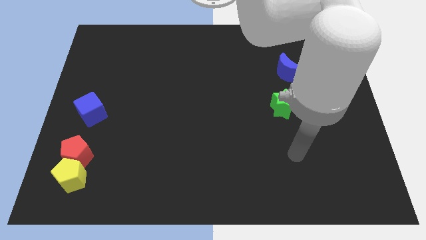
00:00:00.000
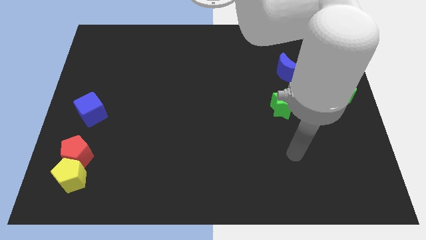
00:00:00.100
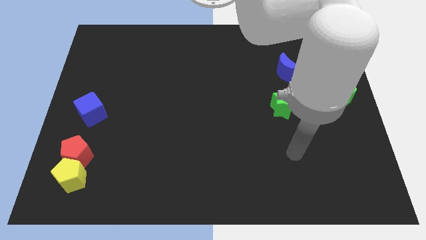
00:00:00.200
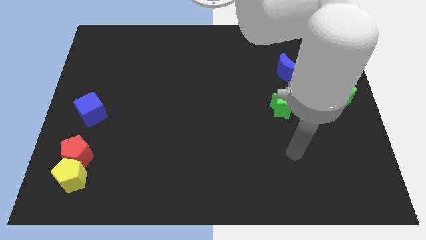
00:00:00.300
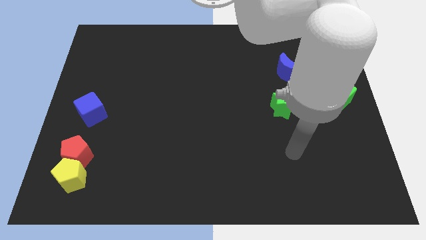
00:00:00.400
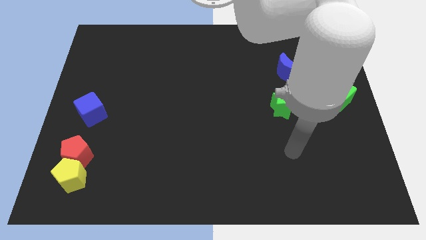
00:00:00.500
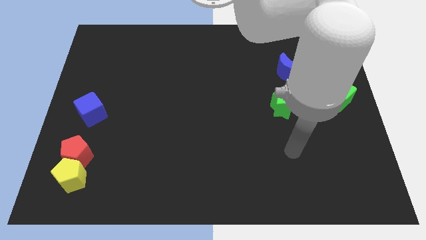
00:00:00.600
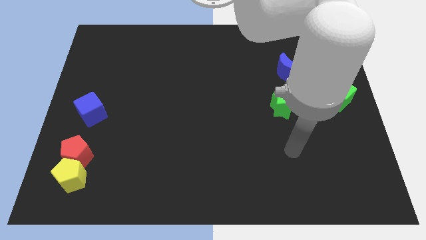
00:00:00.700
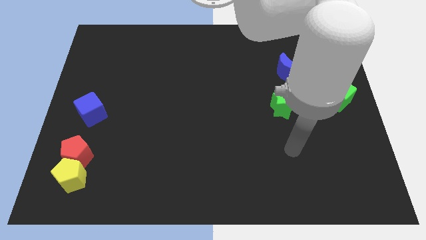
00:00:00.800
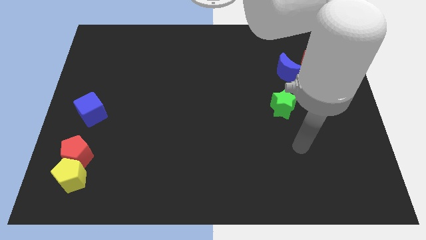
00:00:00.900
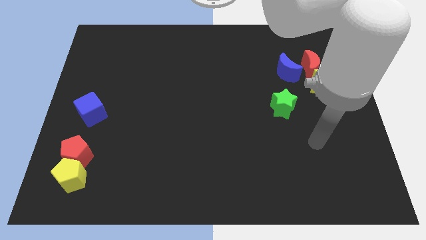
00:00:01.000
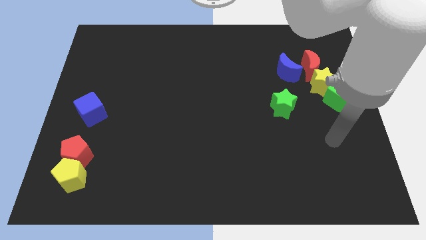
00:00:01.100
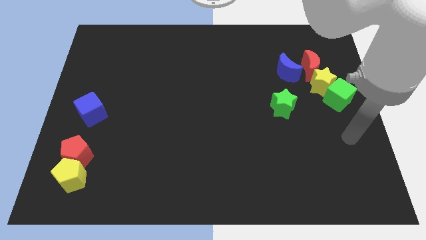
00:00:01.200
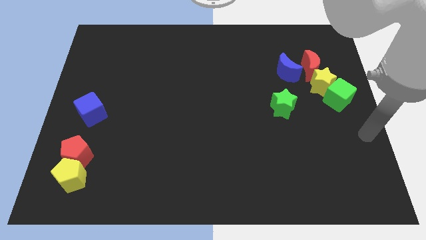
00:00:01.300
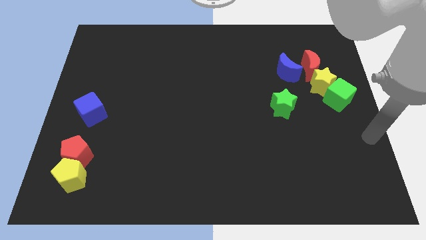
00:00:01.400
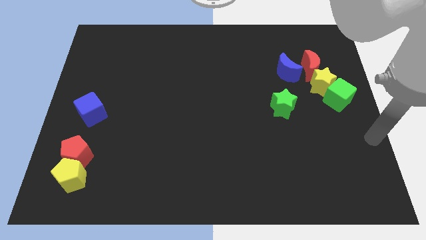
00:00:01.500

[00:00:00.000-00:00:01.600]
move your arm to the right side of the board

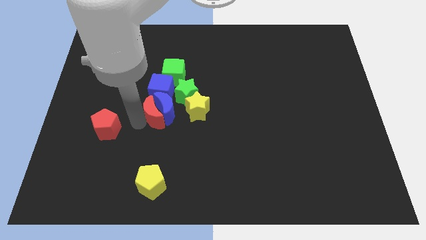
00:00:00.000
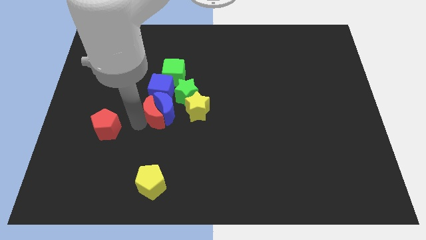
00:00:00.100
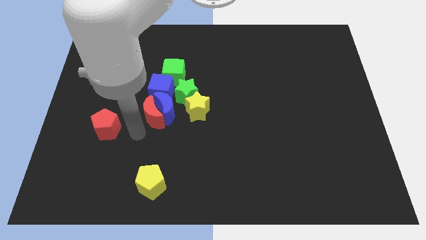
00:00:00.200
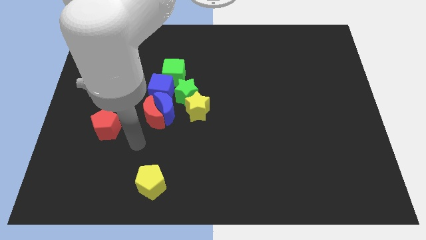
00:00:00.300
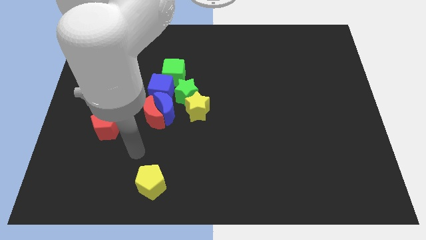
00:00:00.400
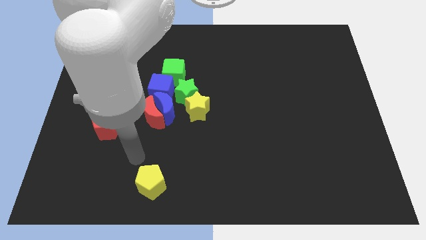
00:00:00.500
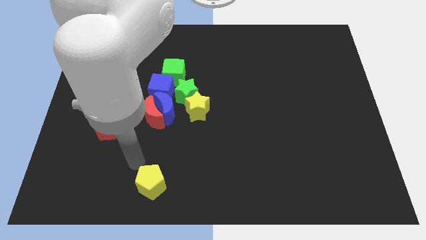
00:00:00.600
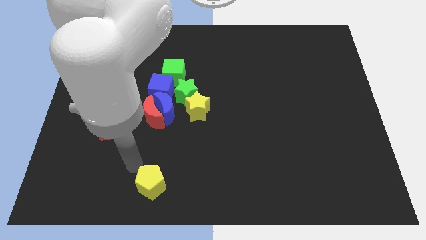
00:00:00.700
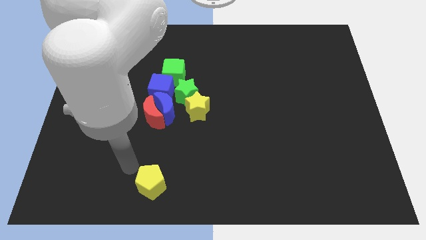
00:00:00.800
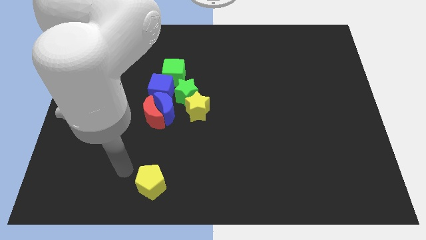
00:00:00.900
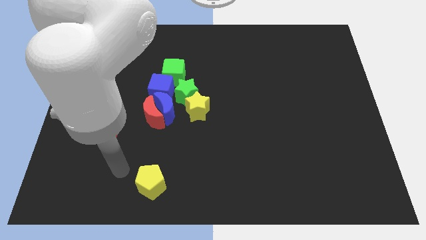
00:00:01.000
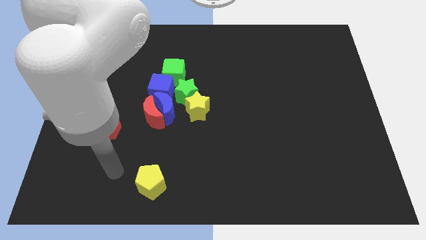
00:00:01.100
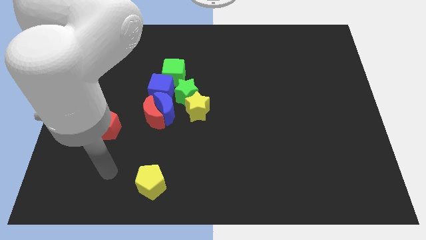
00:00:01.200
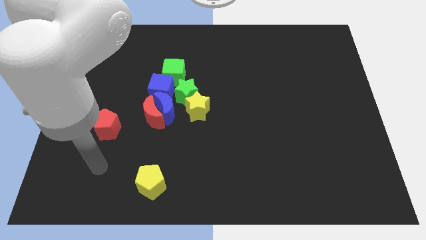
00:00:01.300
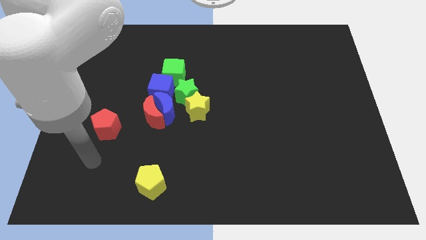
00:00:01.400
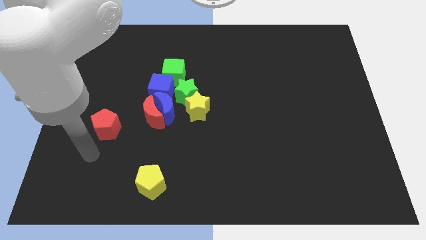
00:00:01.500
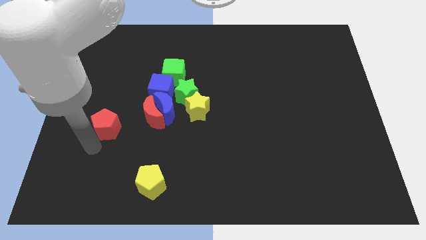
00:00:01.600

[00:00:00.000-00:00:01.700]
move your arm to bottom left of the red pentagon

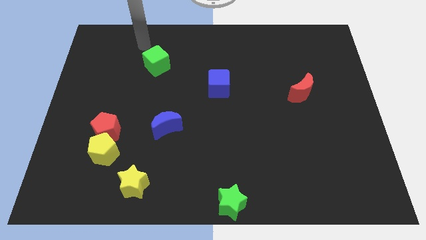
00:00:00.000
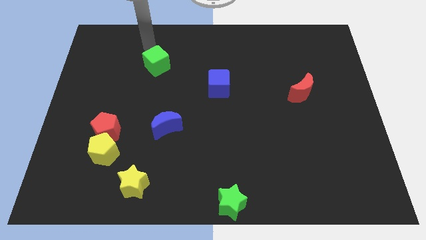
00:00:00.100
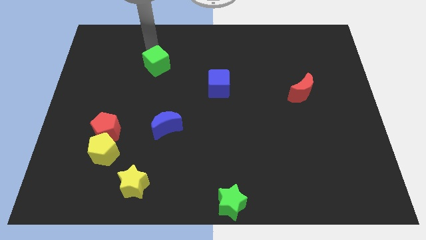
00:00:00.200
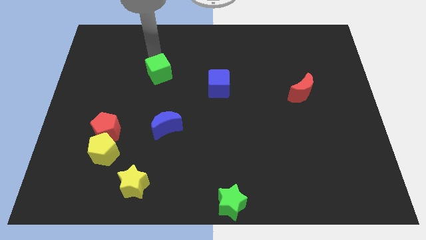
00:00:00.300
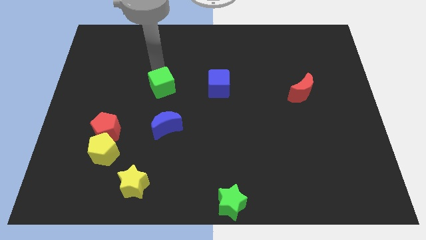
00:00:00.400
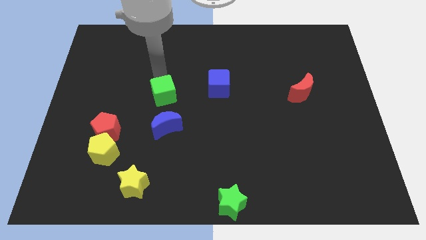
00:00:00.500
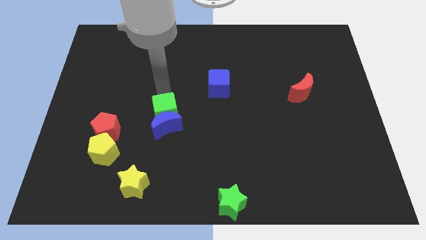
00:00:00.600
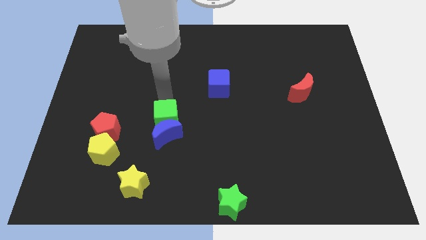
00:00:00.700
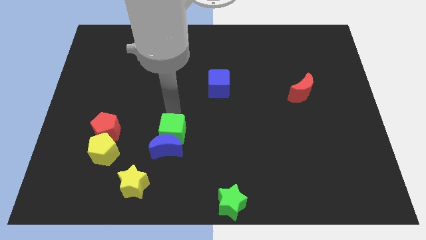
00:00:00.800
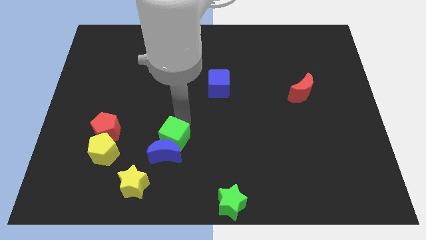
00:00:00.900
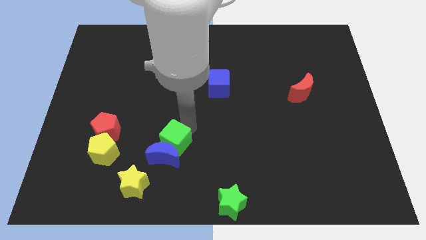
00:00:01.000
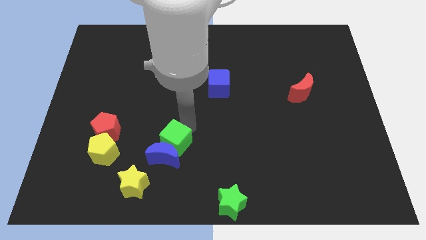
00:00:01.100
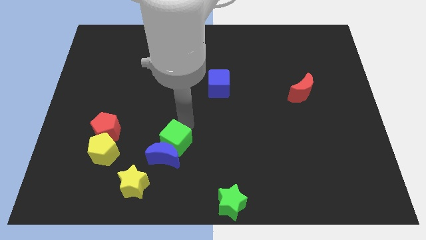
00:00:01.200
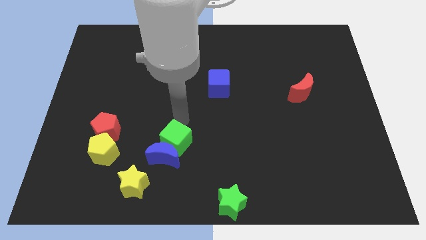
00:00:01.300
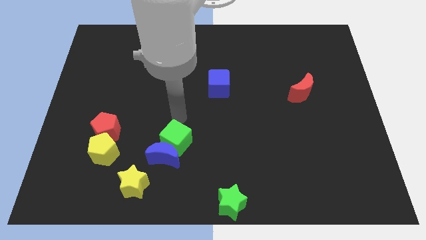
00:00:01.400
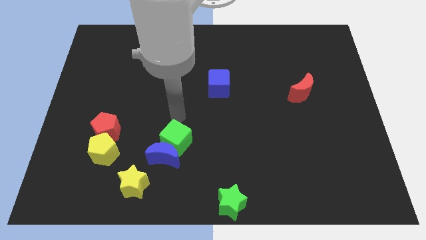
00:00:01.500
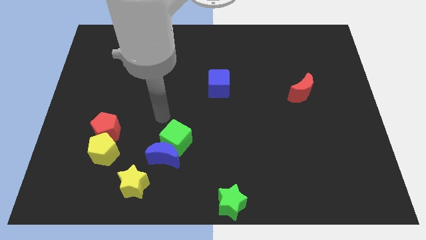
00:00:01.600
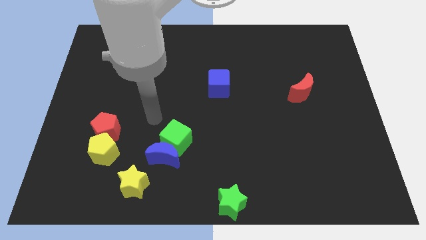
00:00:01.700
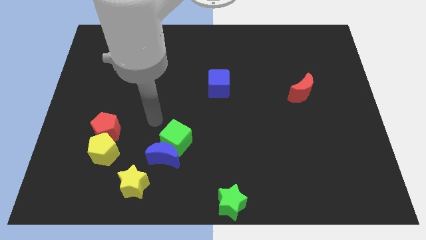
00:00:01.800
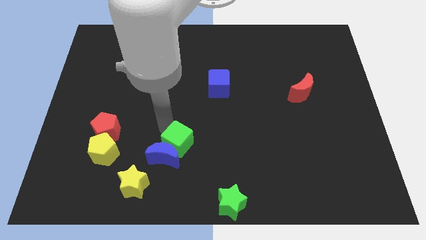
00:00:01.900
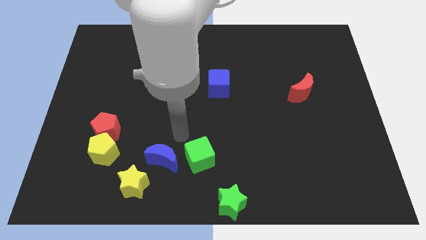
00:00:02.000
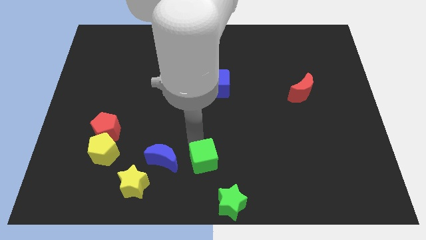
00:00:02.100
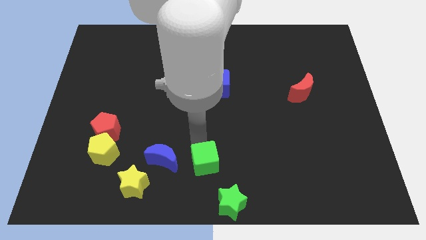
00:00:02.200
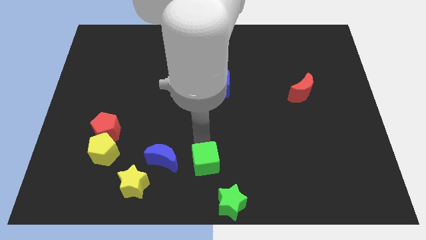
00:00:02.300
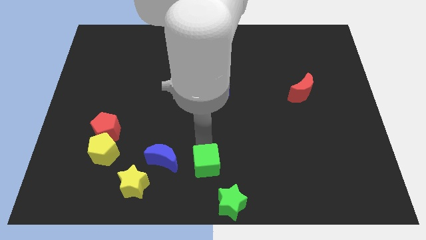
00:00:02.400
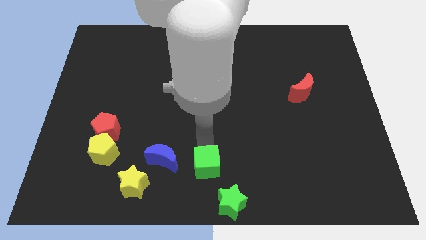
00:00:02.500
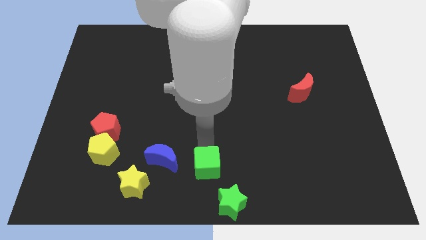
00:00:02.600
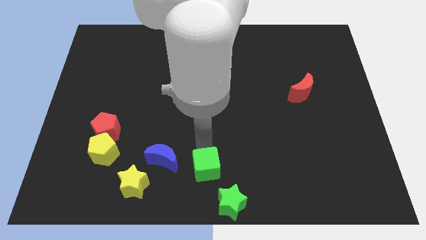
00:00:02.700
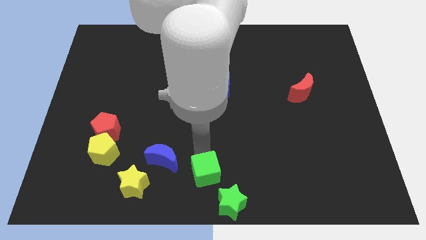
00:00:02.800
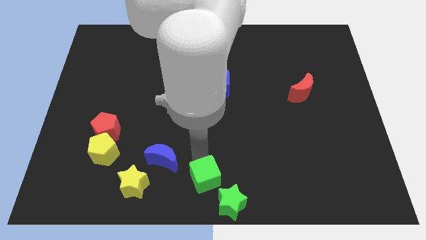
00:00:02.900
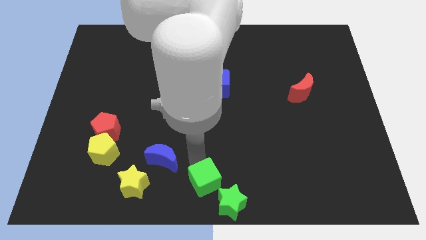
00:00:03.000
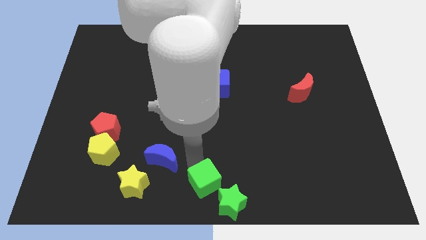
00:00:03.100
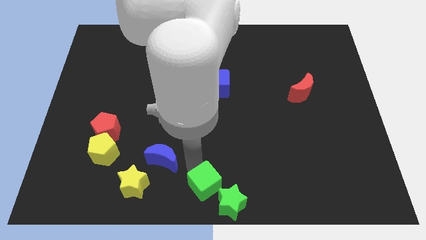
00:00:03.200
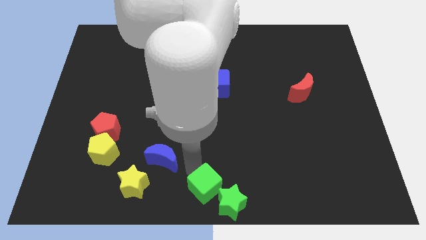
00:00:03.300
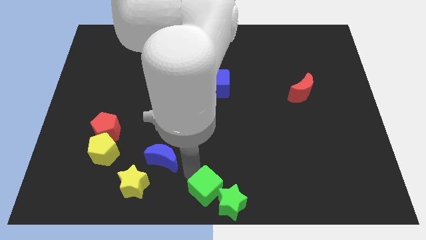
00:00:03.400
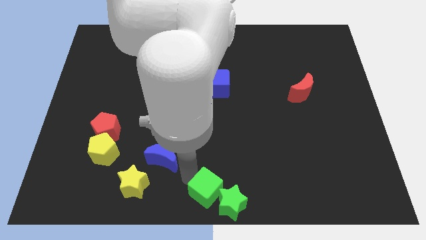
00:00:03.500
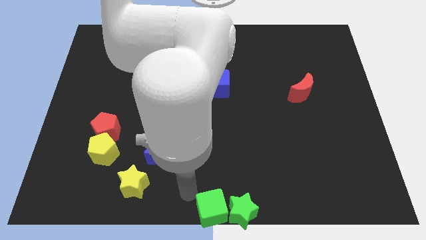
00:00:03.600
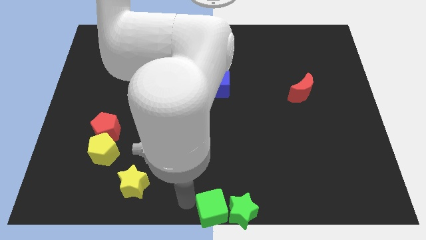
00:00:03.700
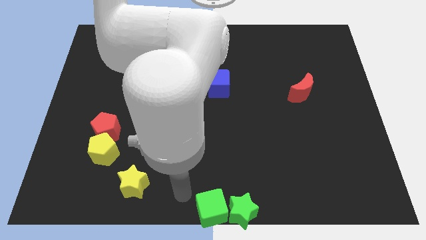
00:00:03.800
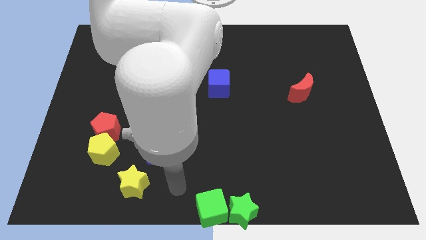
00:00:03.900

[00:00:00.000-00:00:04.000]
push green cube close to the green star

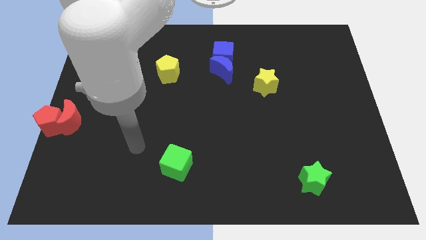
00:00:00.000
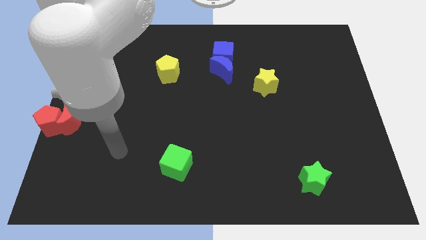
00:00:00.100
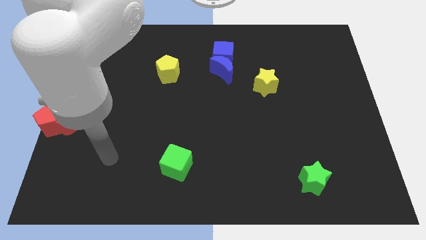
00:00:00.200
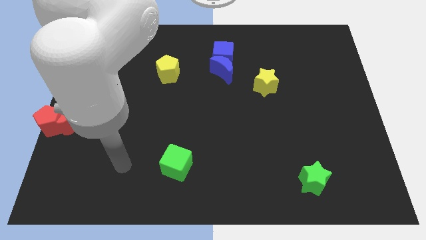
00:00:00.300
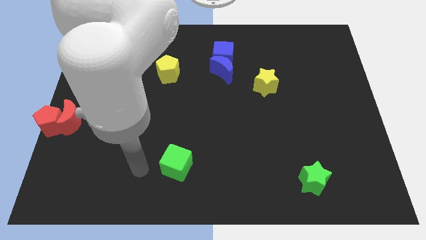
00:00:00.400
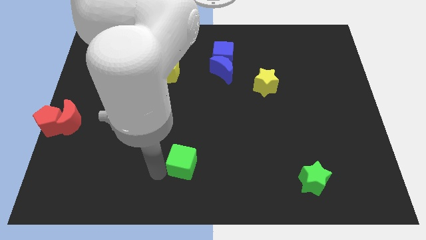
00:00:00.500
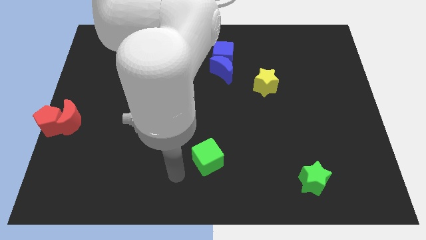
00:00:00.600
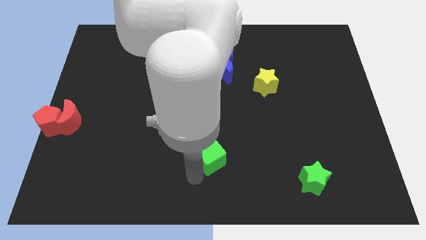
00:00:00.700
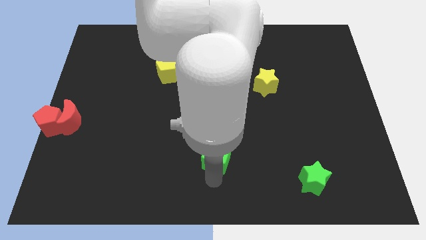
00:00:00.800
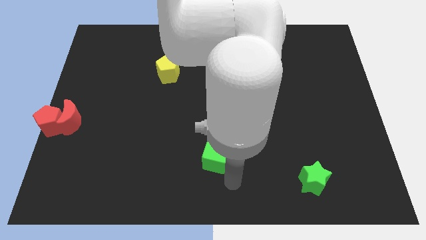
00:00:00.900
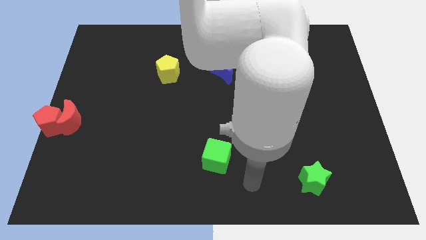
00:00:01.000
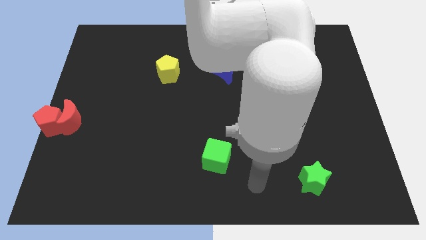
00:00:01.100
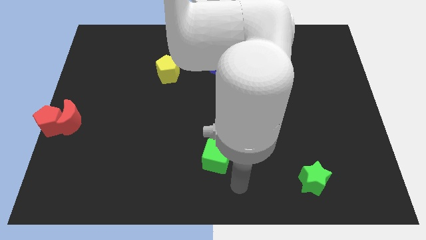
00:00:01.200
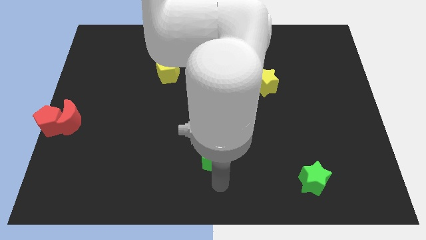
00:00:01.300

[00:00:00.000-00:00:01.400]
push the green cube towards the right side of the board

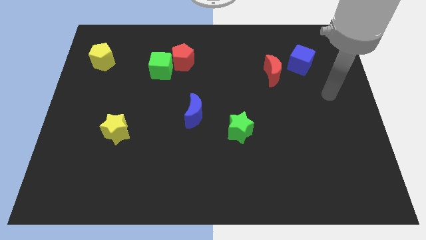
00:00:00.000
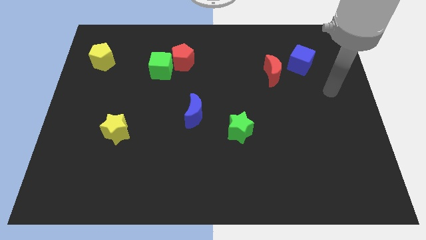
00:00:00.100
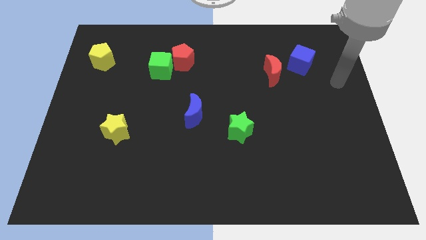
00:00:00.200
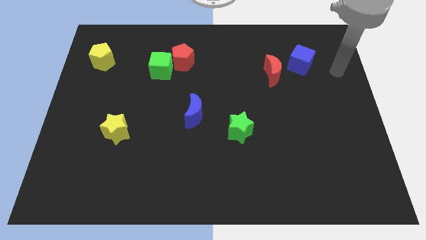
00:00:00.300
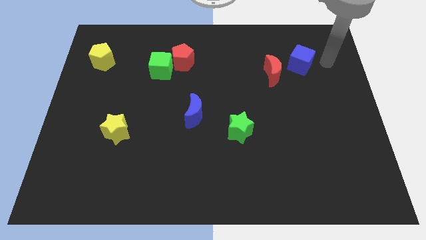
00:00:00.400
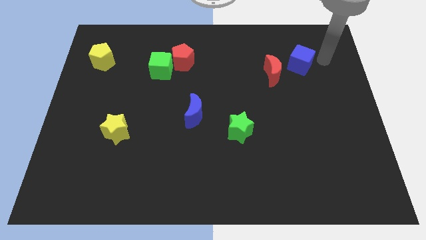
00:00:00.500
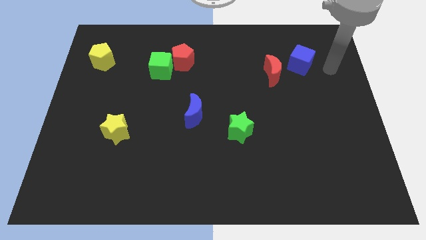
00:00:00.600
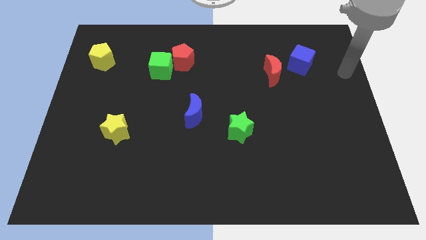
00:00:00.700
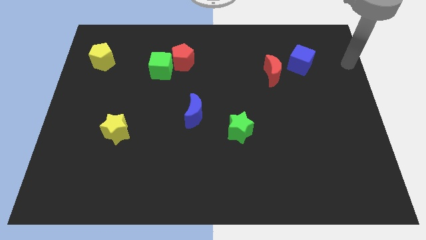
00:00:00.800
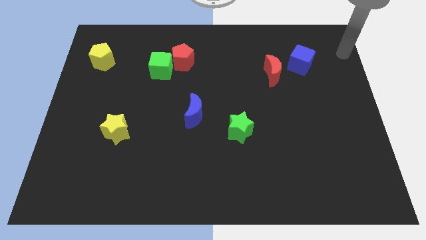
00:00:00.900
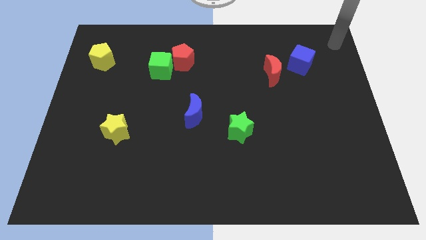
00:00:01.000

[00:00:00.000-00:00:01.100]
place your arm at the top right corner
